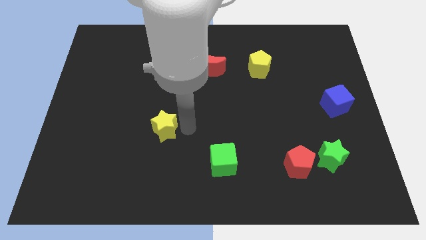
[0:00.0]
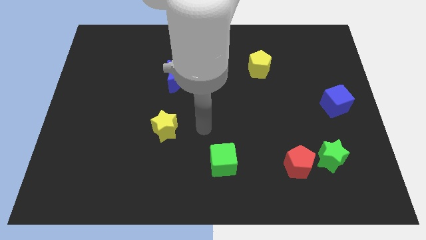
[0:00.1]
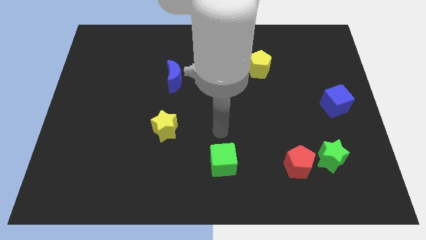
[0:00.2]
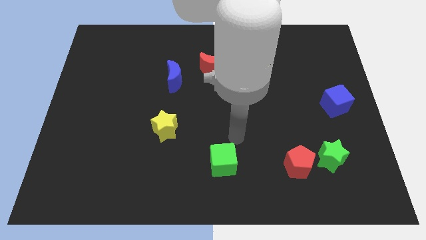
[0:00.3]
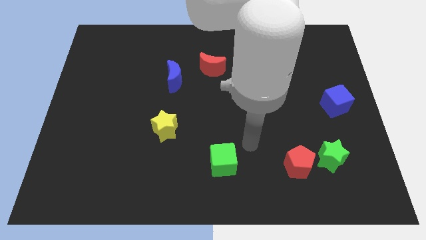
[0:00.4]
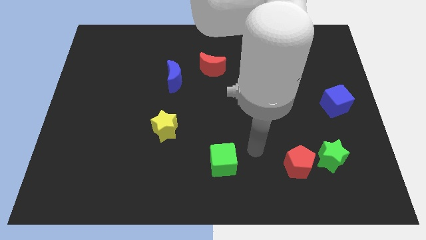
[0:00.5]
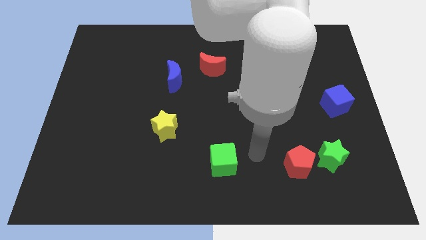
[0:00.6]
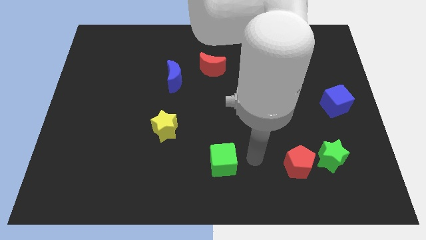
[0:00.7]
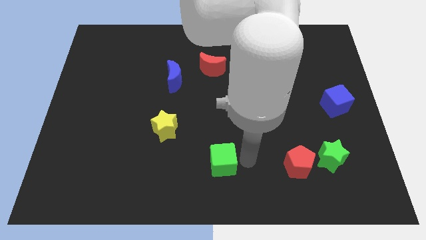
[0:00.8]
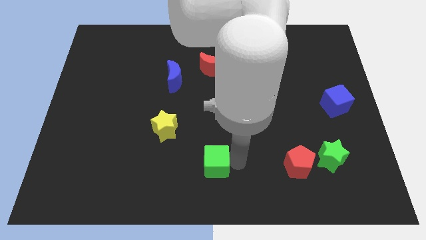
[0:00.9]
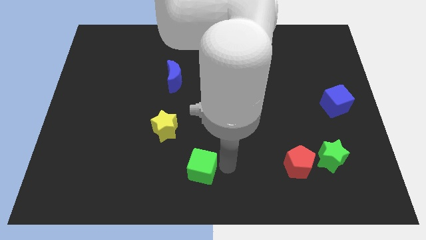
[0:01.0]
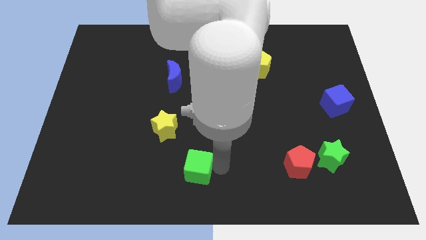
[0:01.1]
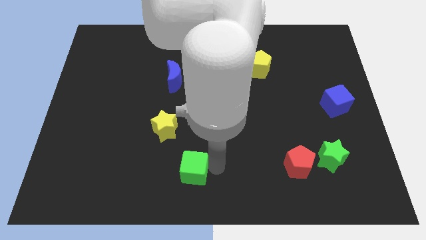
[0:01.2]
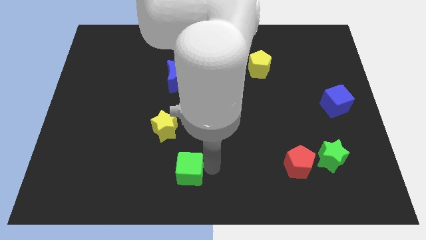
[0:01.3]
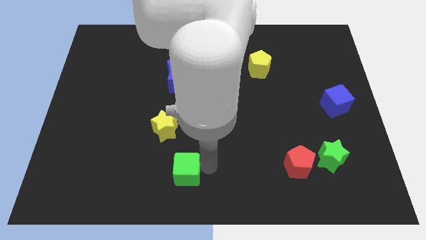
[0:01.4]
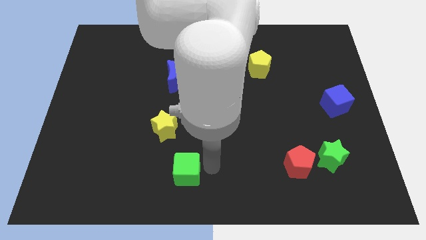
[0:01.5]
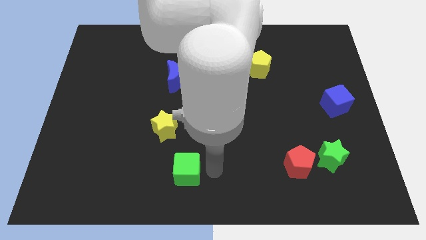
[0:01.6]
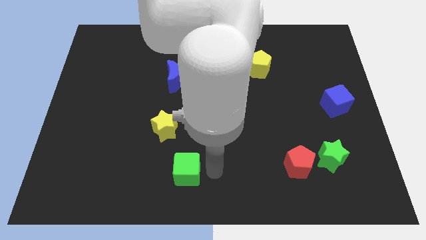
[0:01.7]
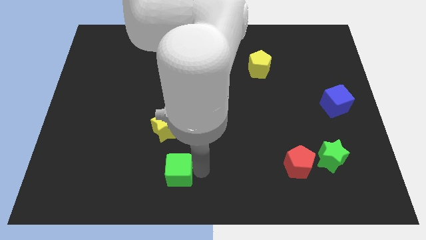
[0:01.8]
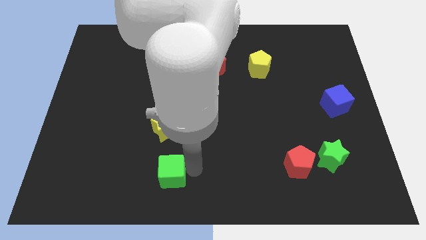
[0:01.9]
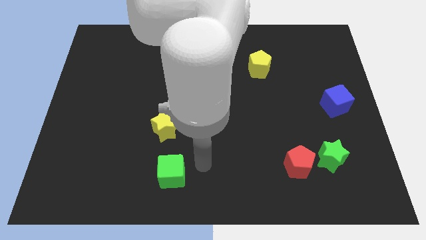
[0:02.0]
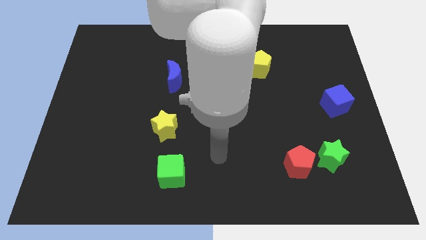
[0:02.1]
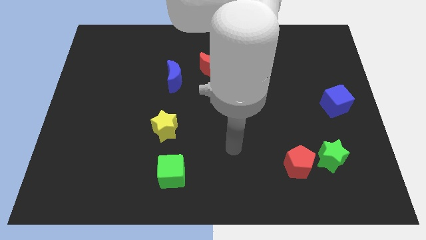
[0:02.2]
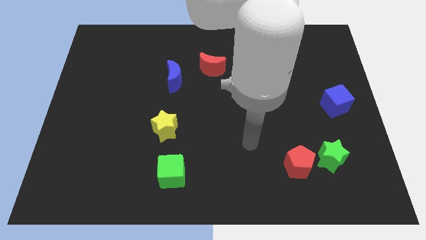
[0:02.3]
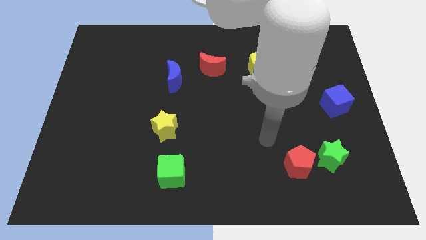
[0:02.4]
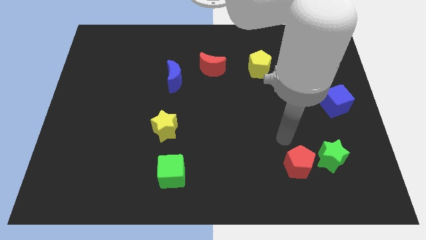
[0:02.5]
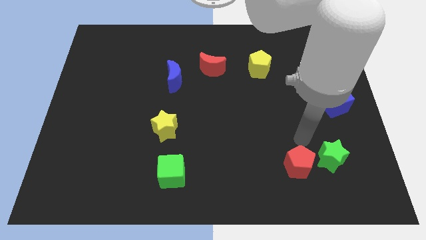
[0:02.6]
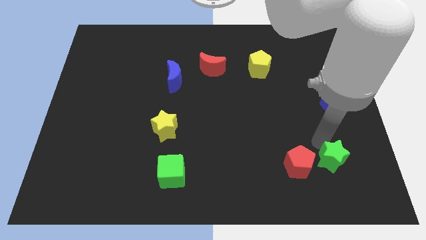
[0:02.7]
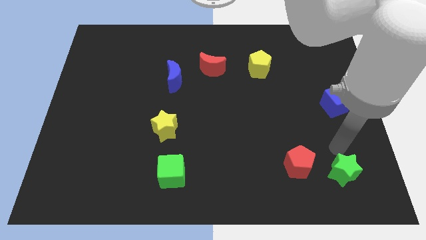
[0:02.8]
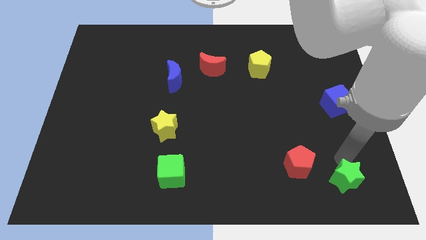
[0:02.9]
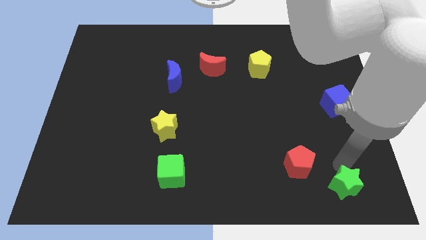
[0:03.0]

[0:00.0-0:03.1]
slide green blocks slightly towards bottom

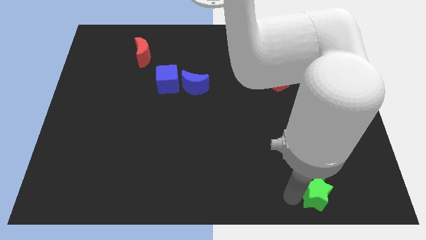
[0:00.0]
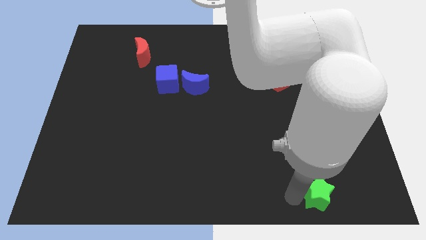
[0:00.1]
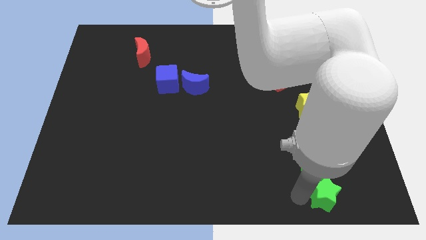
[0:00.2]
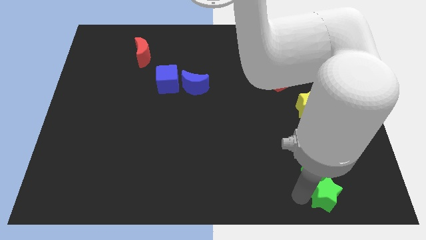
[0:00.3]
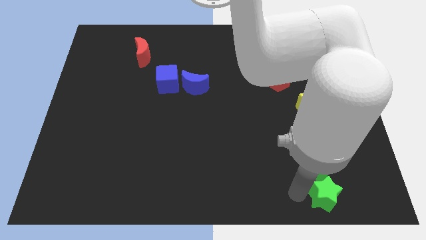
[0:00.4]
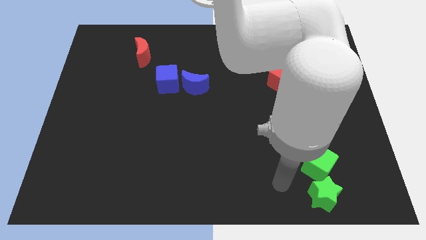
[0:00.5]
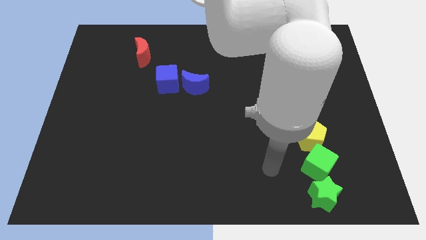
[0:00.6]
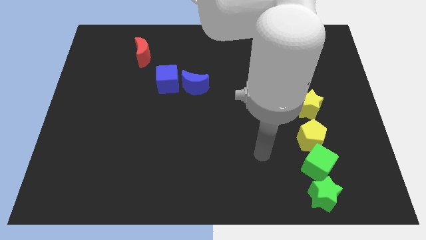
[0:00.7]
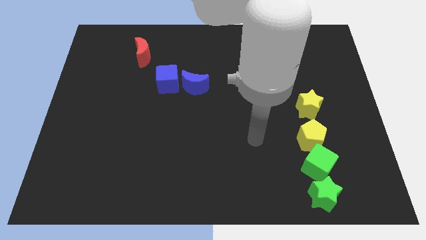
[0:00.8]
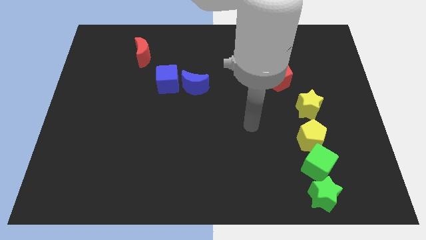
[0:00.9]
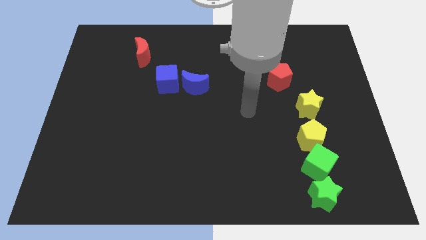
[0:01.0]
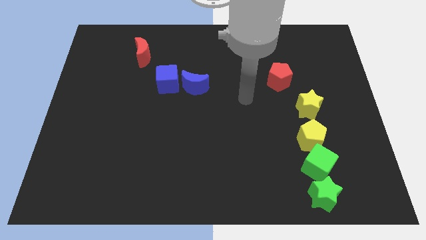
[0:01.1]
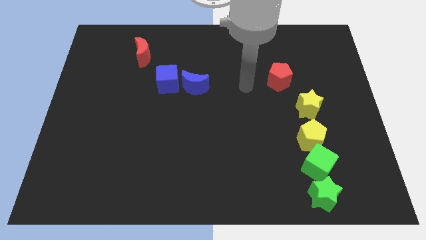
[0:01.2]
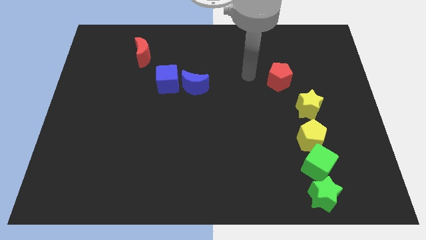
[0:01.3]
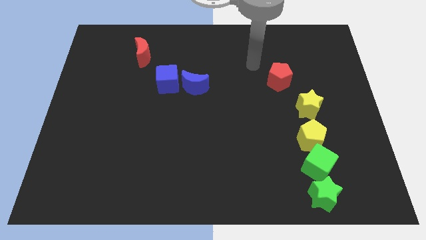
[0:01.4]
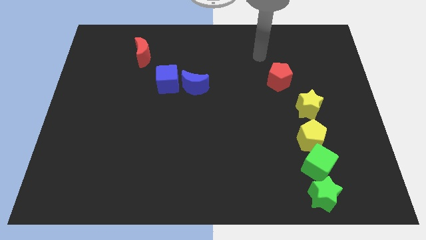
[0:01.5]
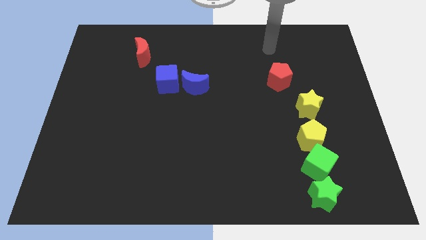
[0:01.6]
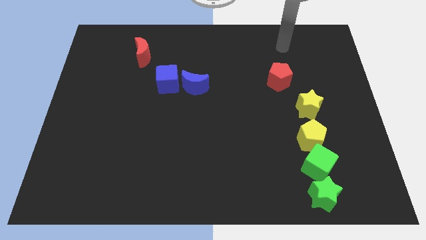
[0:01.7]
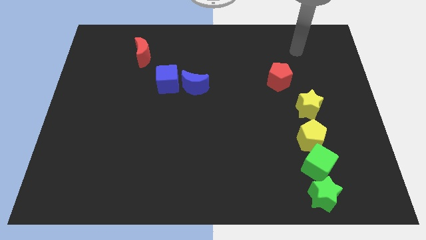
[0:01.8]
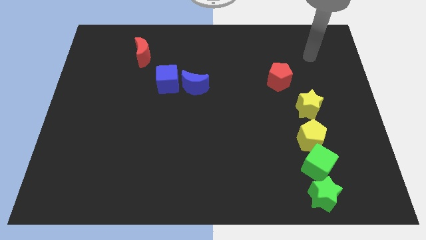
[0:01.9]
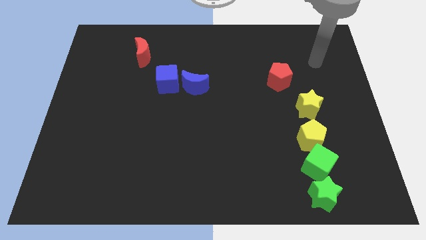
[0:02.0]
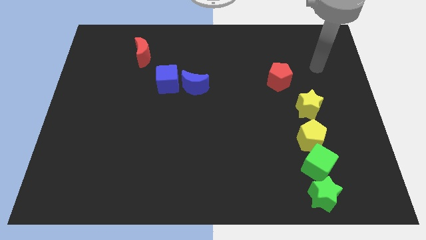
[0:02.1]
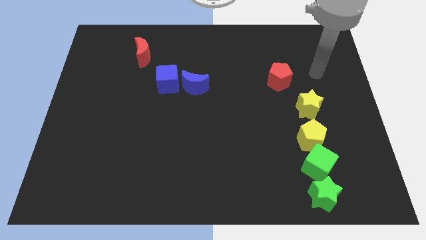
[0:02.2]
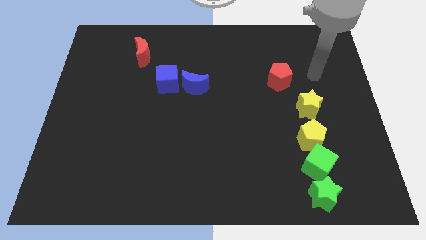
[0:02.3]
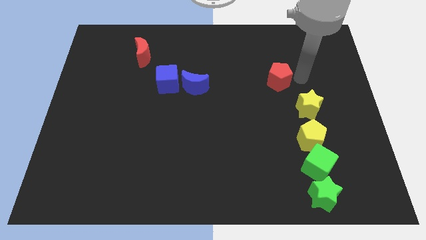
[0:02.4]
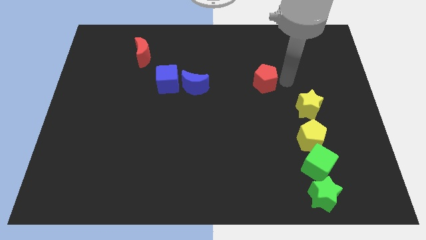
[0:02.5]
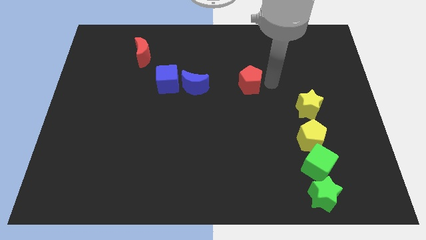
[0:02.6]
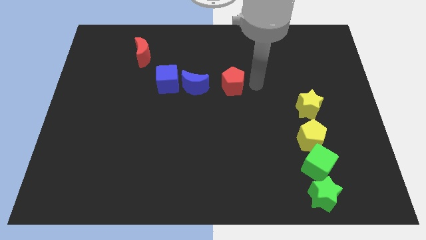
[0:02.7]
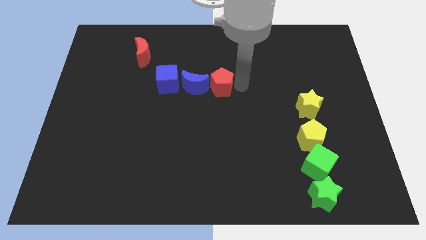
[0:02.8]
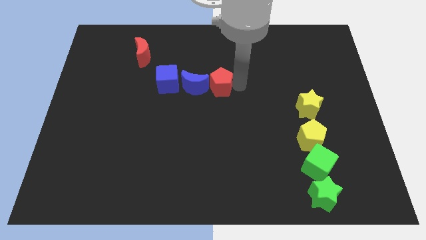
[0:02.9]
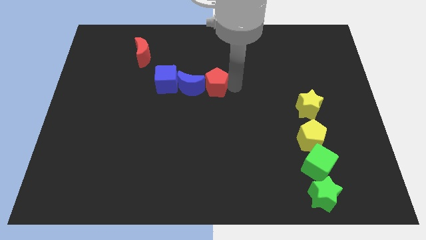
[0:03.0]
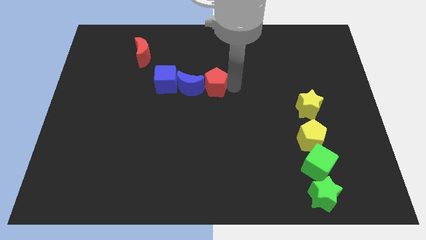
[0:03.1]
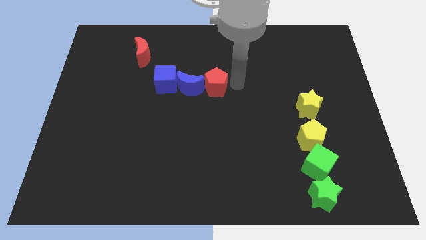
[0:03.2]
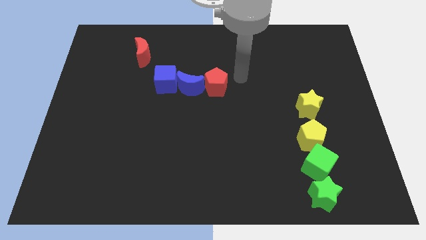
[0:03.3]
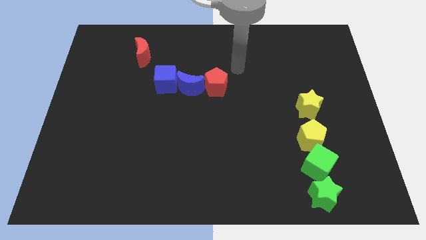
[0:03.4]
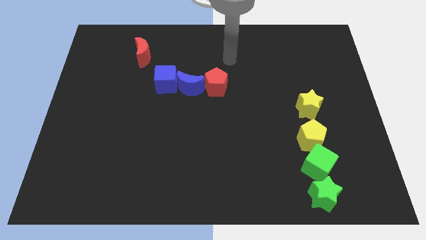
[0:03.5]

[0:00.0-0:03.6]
move the red pentagon into the blue moon

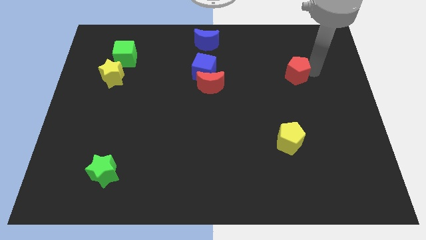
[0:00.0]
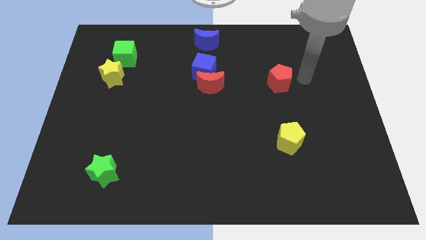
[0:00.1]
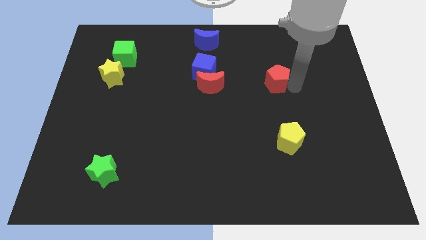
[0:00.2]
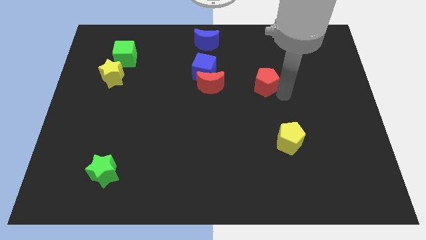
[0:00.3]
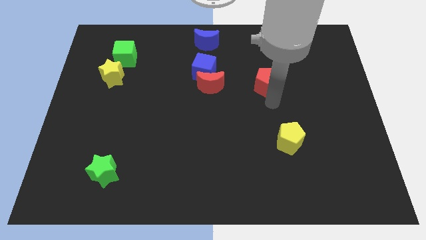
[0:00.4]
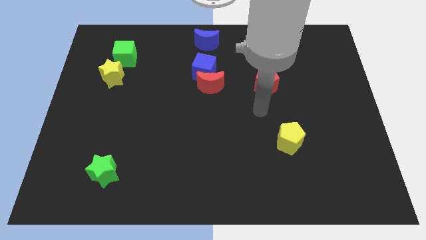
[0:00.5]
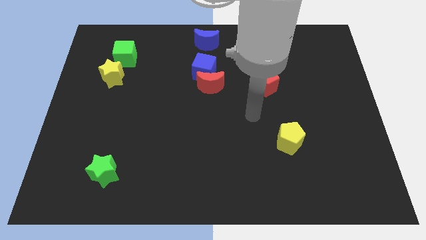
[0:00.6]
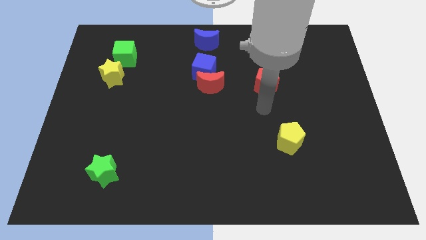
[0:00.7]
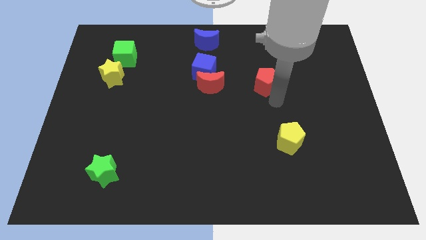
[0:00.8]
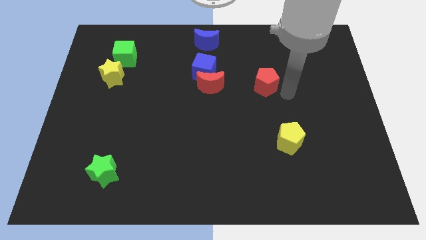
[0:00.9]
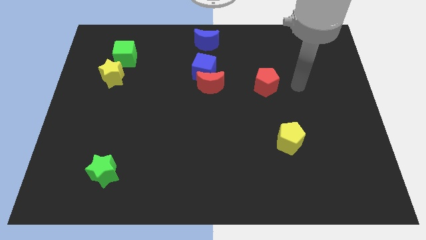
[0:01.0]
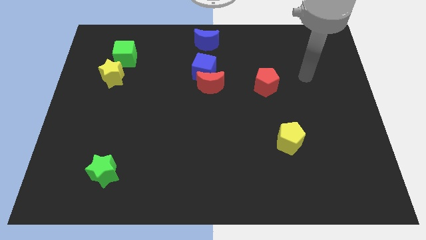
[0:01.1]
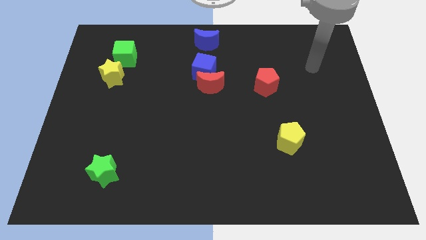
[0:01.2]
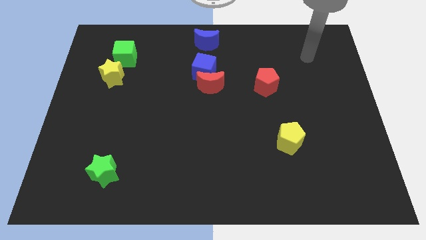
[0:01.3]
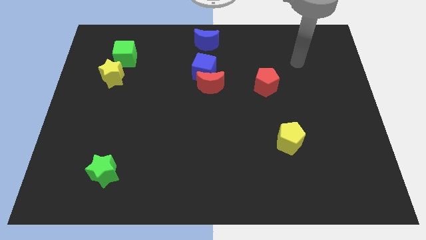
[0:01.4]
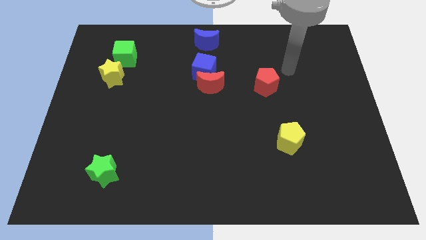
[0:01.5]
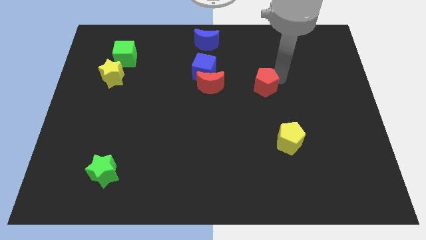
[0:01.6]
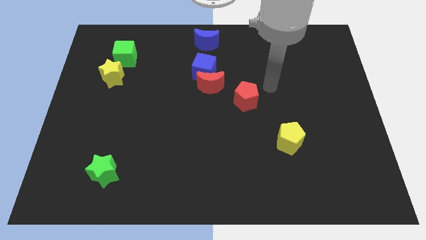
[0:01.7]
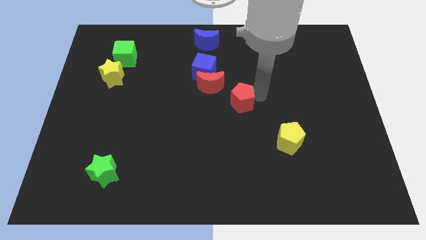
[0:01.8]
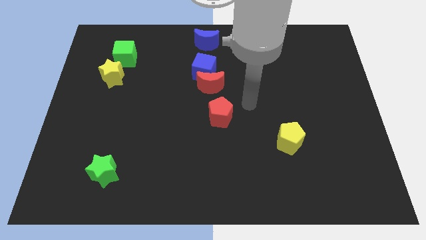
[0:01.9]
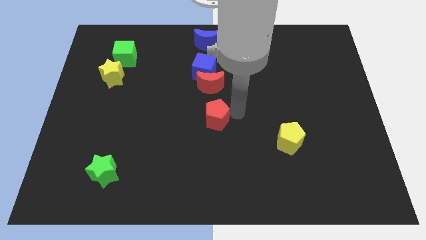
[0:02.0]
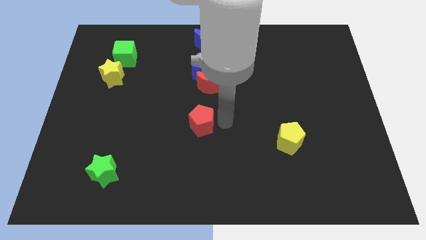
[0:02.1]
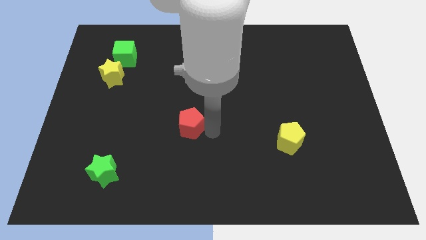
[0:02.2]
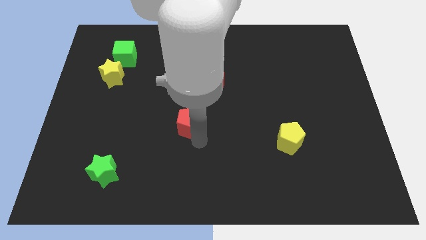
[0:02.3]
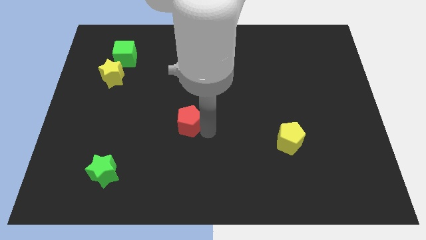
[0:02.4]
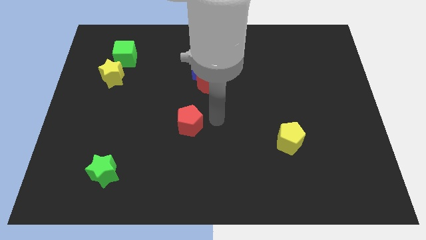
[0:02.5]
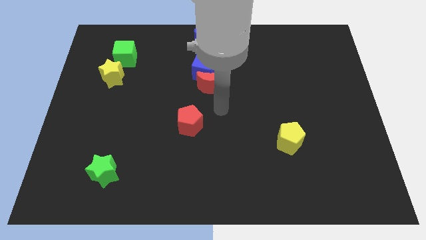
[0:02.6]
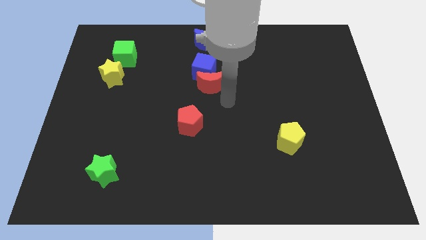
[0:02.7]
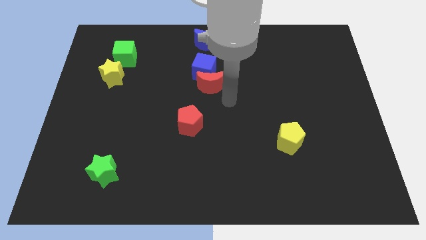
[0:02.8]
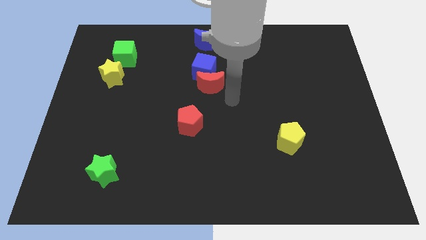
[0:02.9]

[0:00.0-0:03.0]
place the red pentagon to the center of the board
